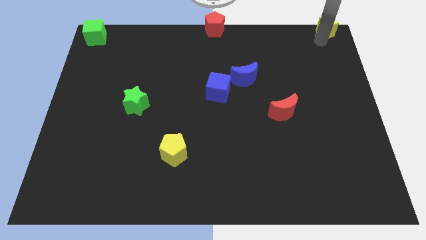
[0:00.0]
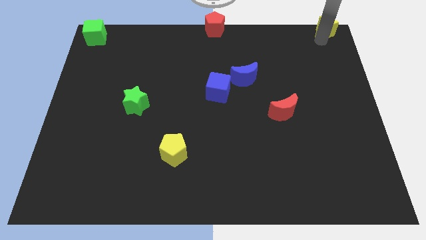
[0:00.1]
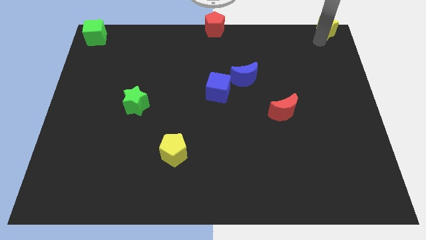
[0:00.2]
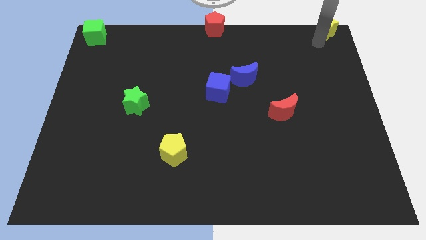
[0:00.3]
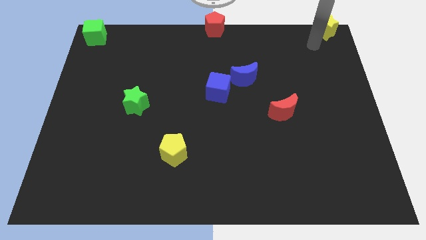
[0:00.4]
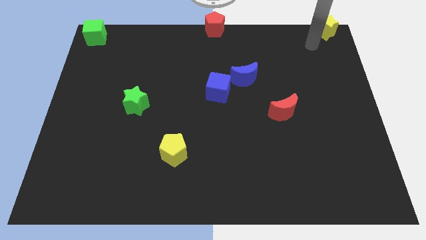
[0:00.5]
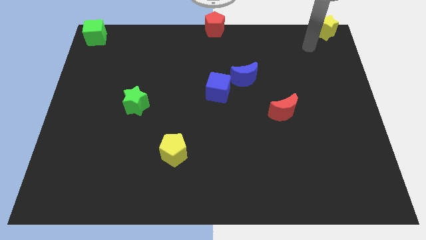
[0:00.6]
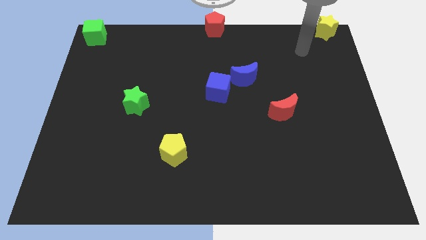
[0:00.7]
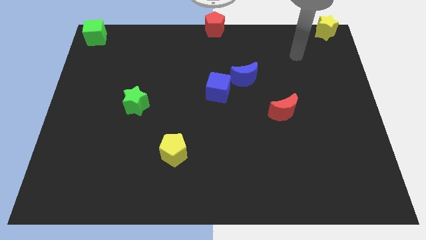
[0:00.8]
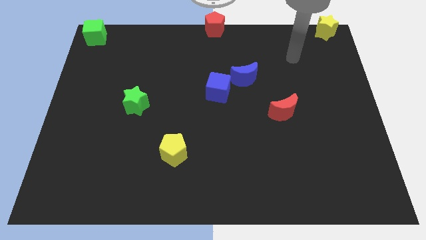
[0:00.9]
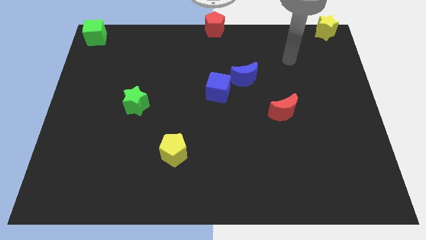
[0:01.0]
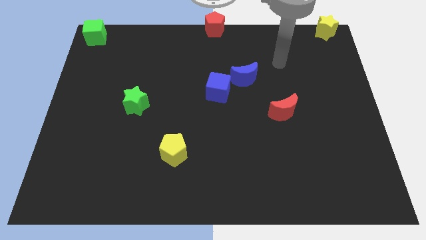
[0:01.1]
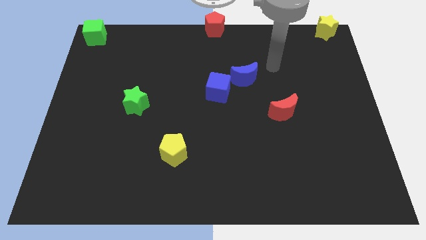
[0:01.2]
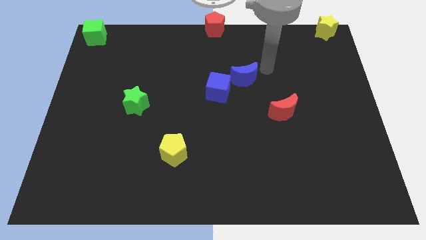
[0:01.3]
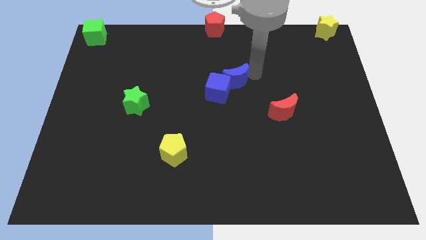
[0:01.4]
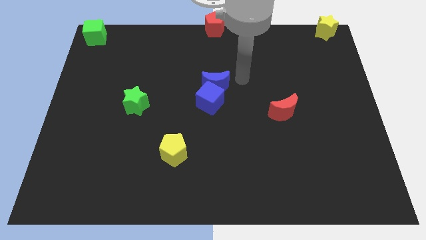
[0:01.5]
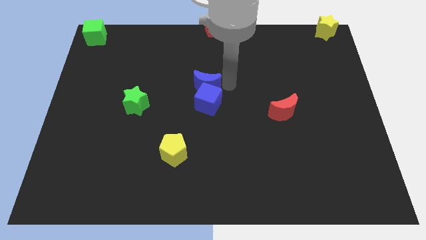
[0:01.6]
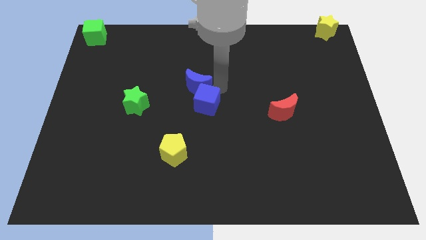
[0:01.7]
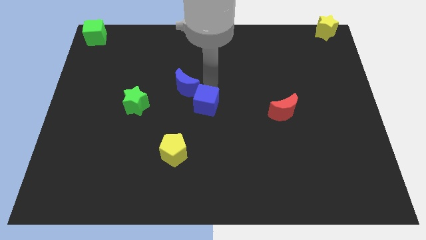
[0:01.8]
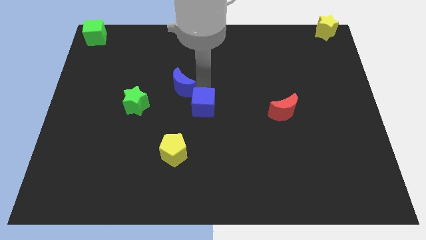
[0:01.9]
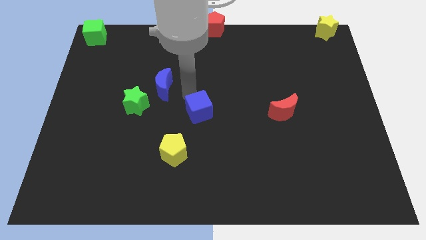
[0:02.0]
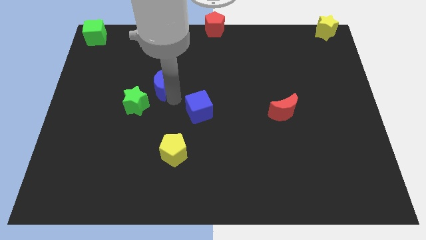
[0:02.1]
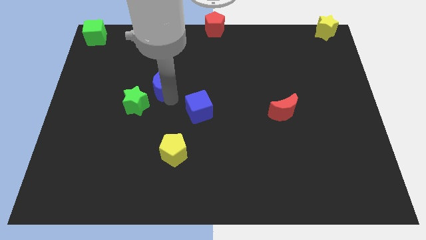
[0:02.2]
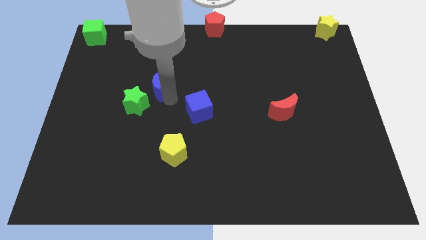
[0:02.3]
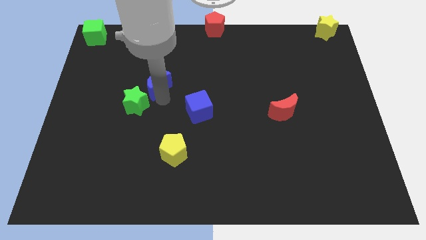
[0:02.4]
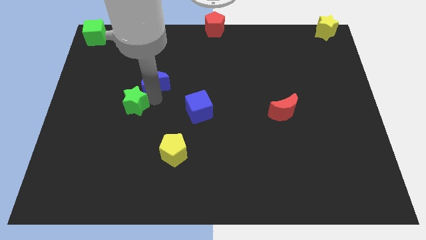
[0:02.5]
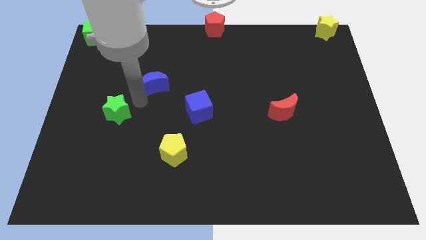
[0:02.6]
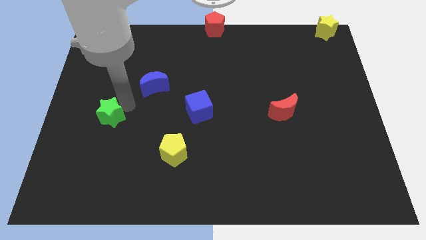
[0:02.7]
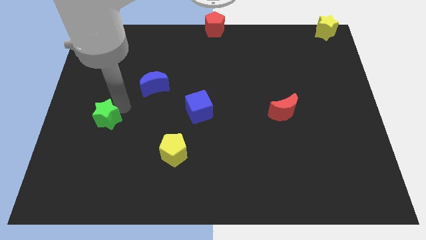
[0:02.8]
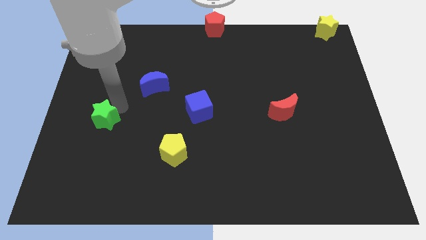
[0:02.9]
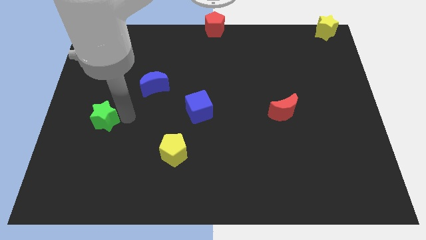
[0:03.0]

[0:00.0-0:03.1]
separate blue crescent from the blue cube

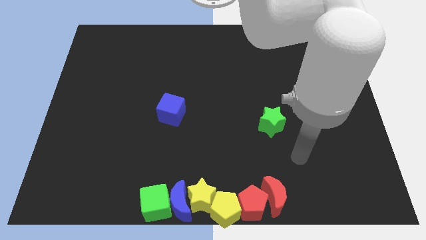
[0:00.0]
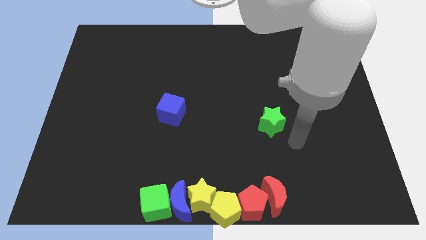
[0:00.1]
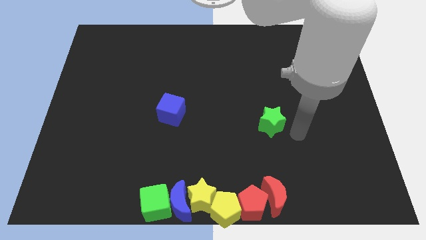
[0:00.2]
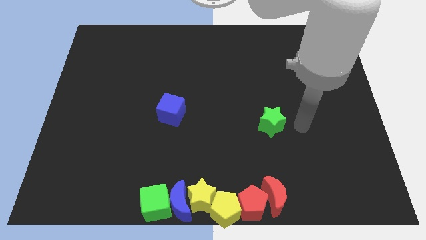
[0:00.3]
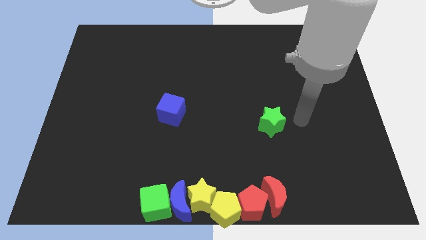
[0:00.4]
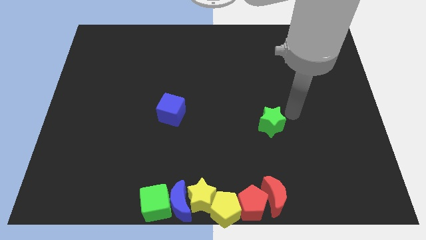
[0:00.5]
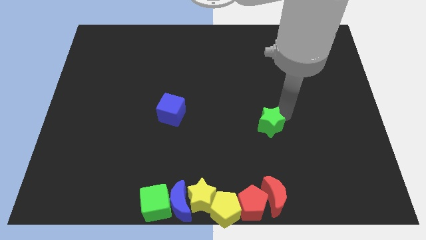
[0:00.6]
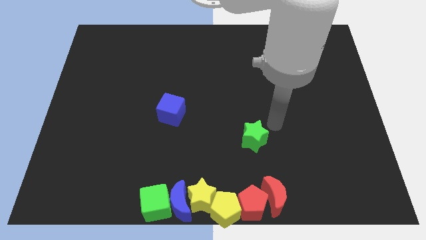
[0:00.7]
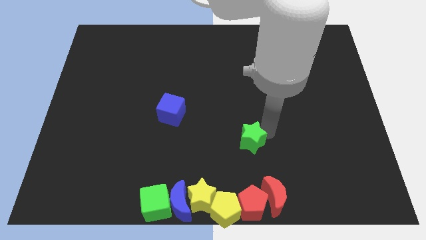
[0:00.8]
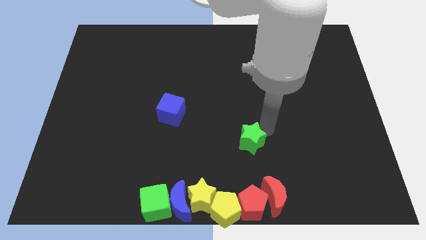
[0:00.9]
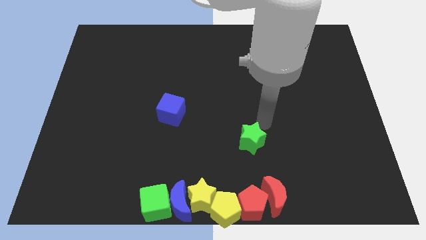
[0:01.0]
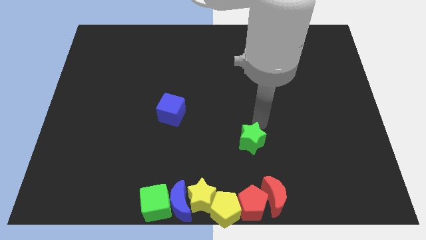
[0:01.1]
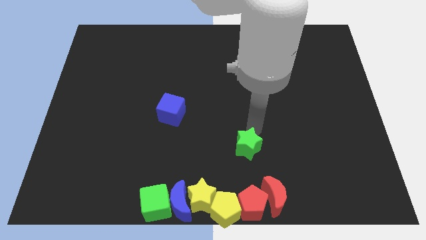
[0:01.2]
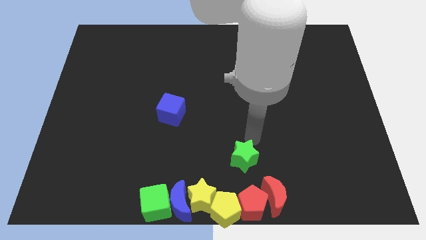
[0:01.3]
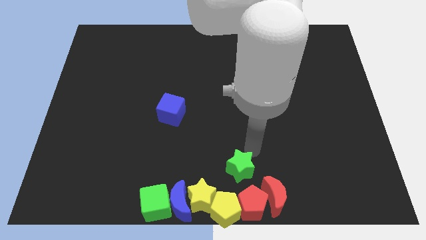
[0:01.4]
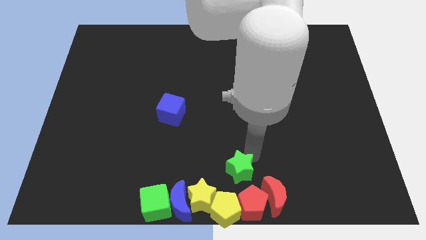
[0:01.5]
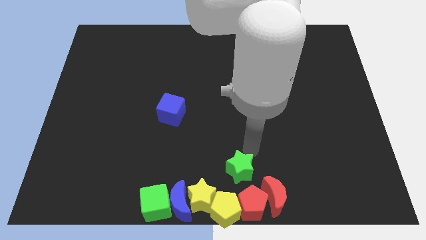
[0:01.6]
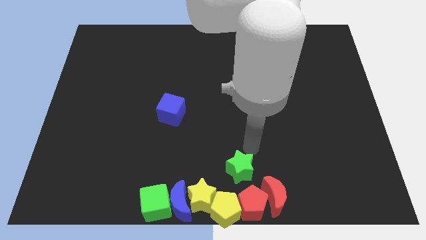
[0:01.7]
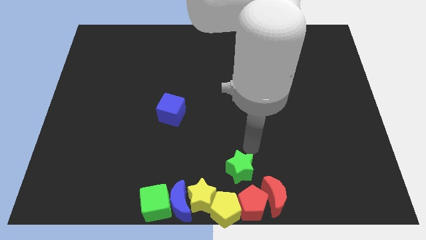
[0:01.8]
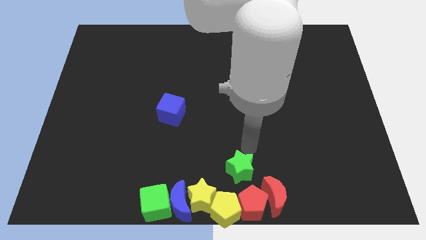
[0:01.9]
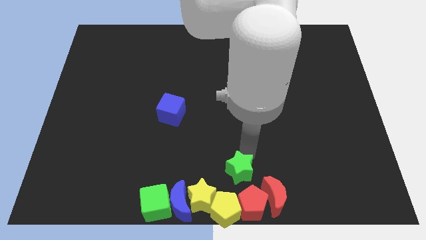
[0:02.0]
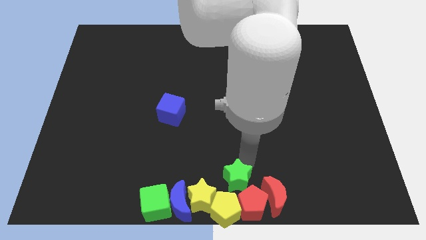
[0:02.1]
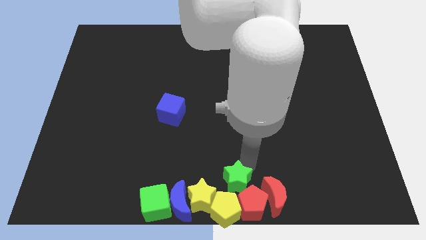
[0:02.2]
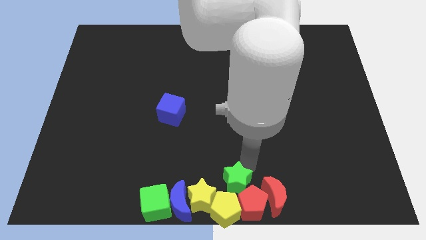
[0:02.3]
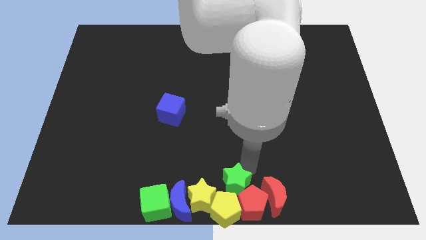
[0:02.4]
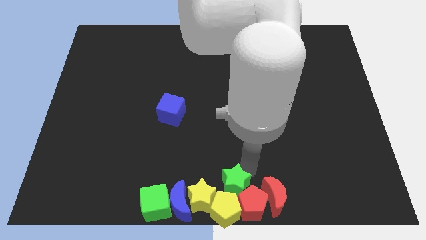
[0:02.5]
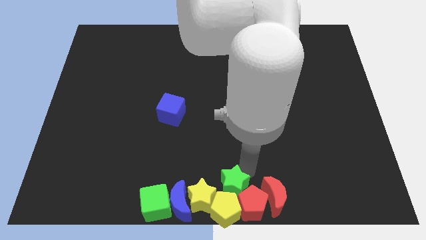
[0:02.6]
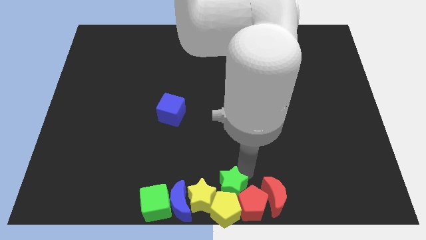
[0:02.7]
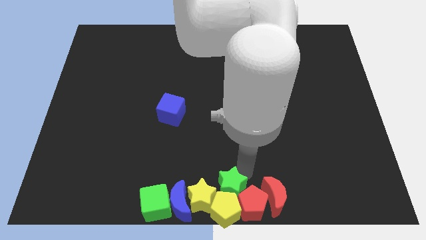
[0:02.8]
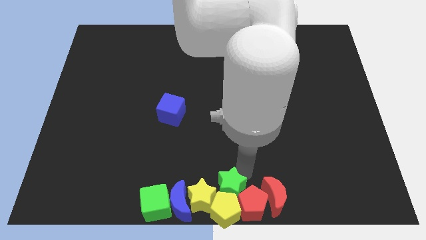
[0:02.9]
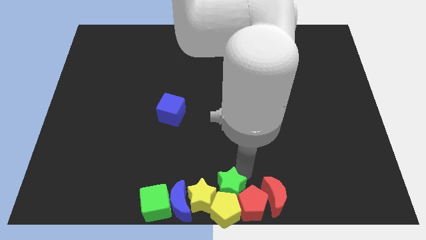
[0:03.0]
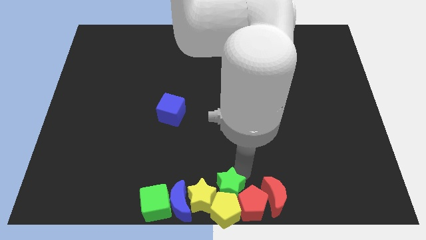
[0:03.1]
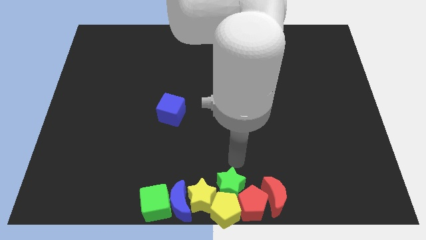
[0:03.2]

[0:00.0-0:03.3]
push the green star into the top side of the yellow pentagon

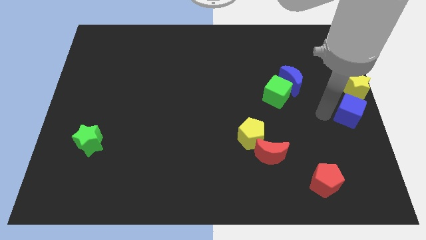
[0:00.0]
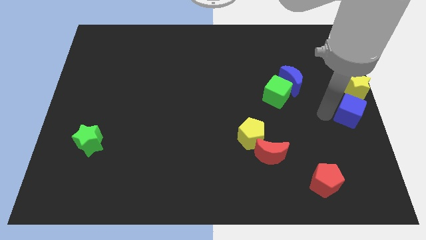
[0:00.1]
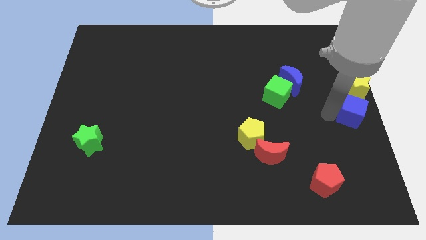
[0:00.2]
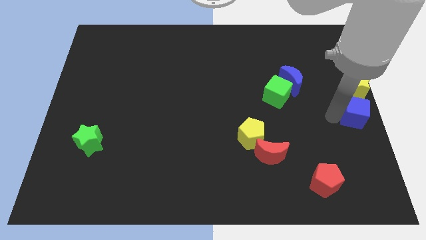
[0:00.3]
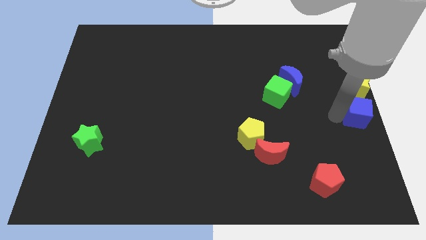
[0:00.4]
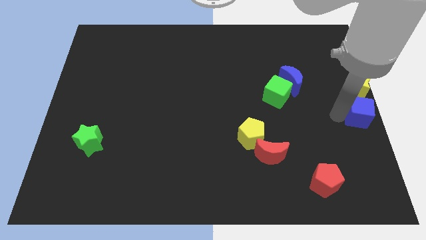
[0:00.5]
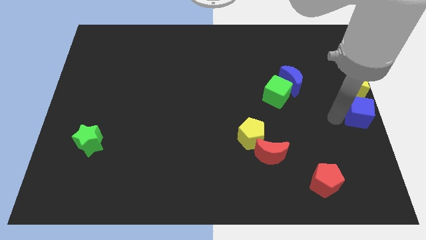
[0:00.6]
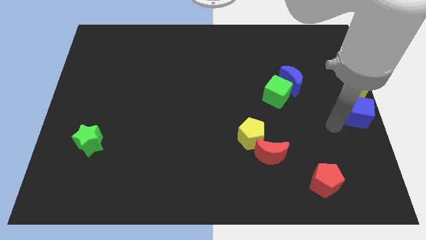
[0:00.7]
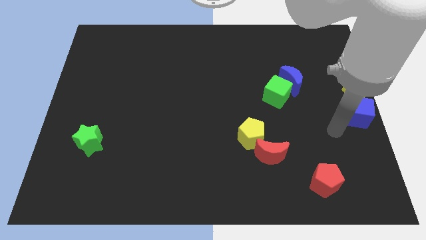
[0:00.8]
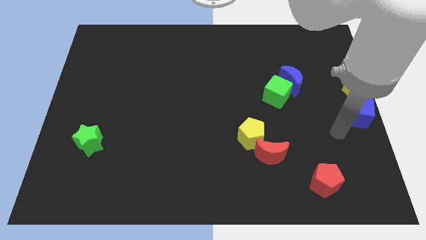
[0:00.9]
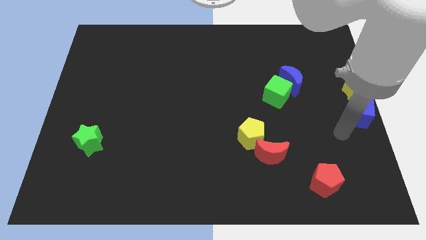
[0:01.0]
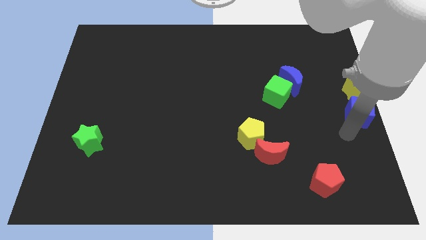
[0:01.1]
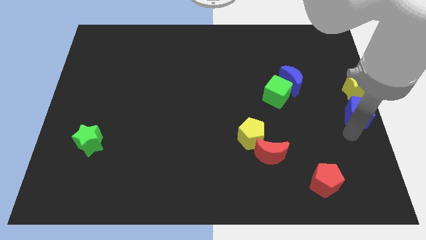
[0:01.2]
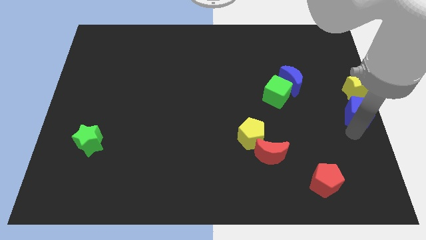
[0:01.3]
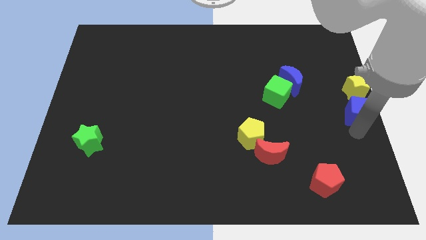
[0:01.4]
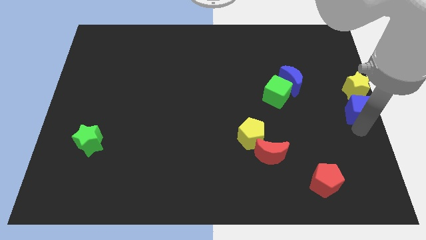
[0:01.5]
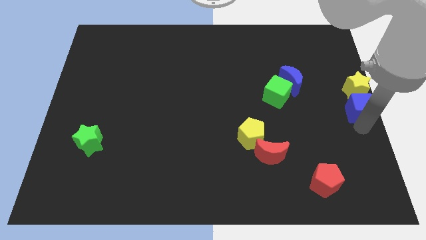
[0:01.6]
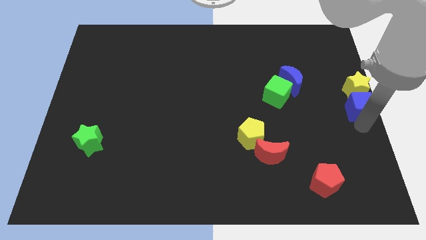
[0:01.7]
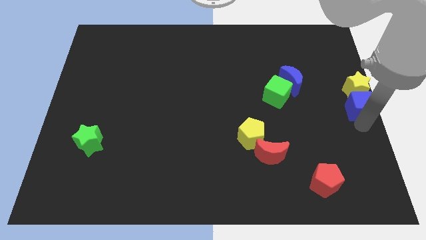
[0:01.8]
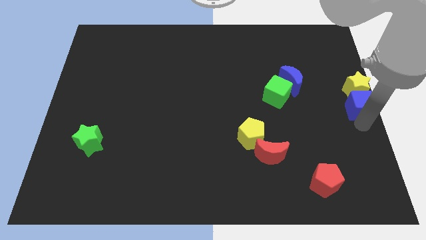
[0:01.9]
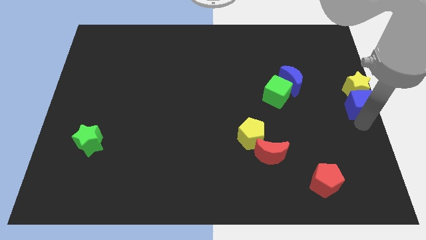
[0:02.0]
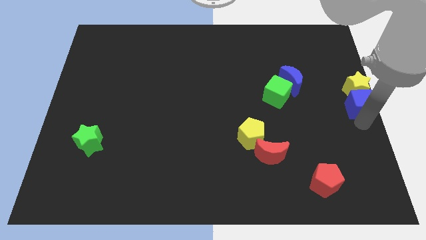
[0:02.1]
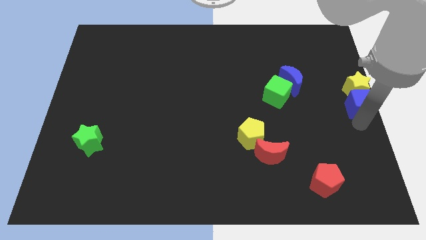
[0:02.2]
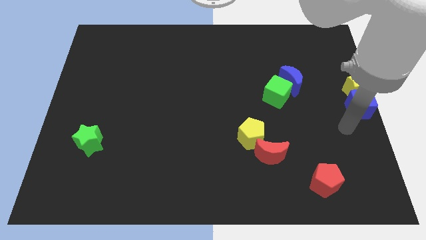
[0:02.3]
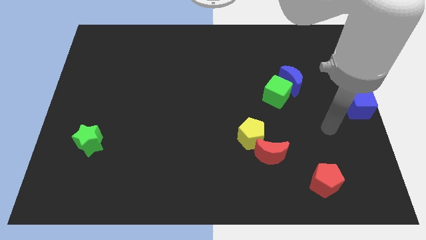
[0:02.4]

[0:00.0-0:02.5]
slightly move the blue cube towards the right center of the board
